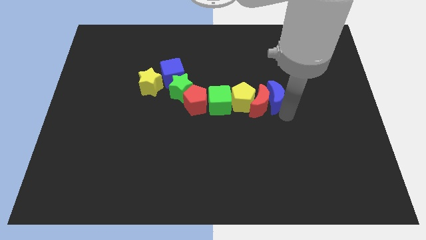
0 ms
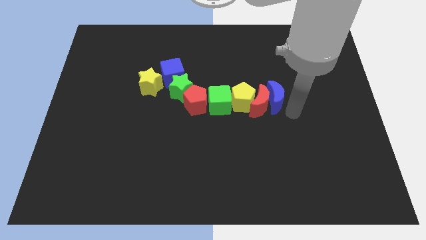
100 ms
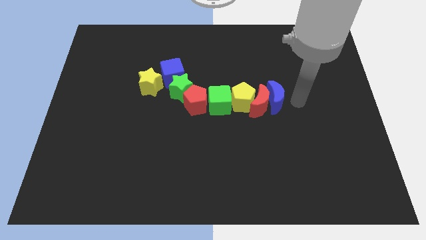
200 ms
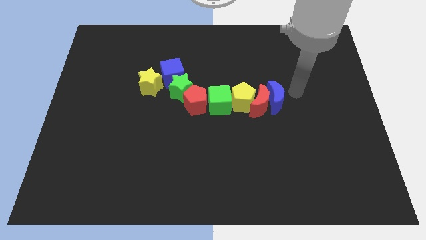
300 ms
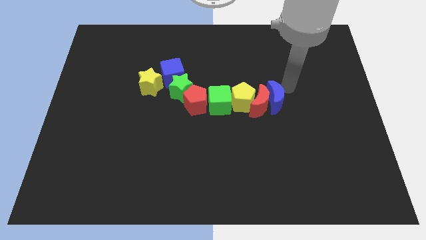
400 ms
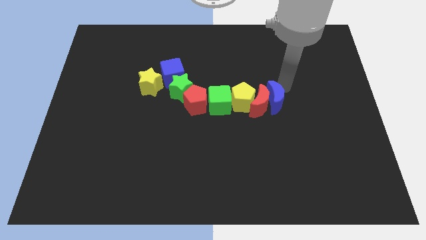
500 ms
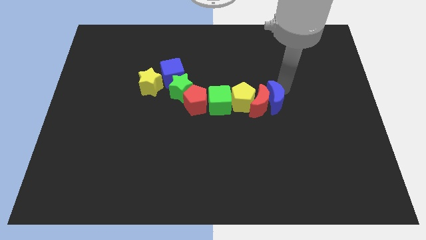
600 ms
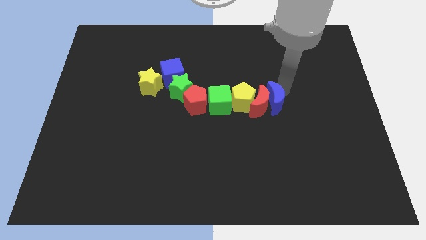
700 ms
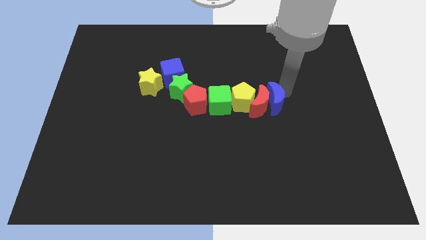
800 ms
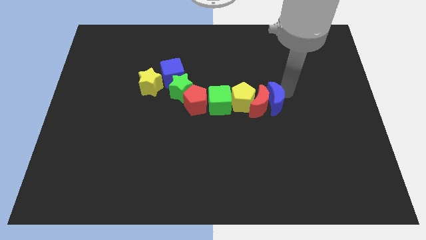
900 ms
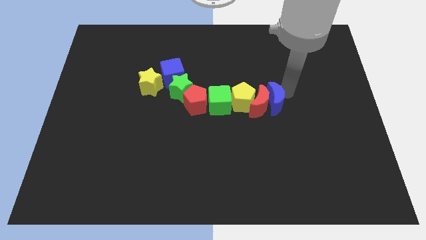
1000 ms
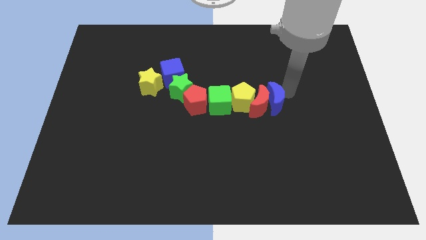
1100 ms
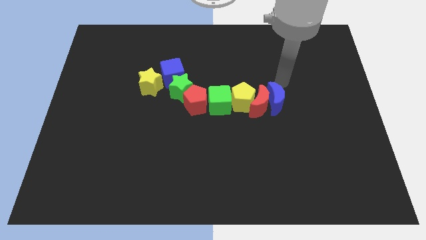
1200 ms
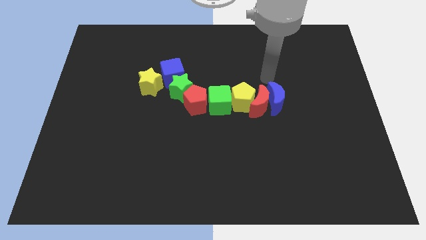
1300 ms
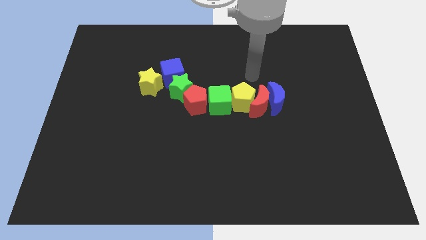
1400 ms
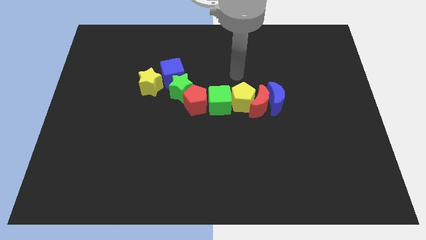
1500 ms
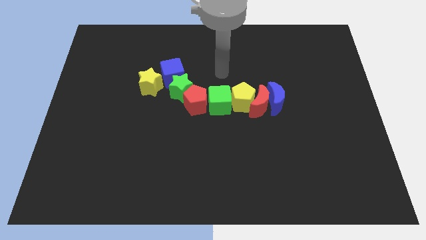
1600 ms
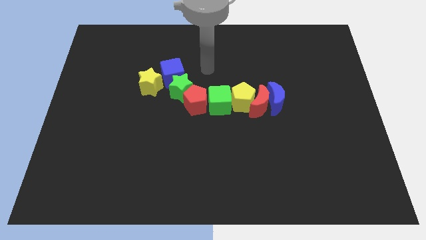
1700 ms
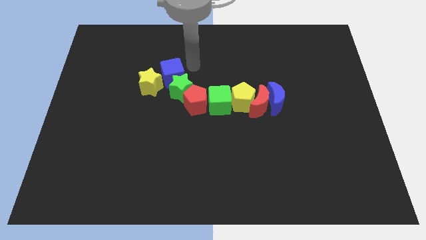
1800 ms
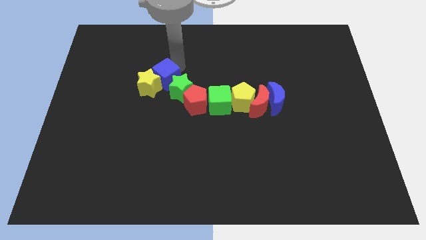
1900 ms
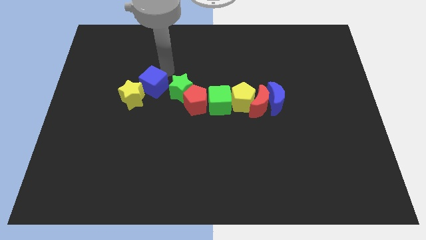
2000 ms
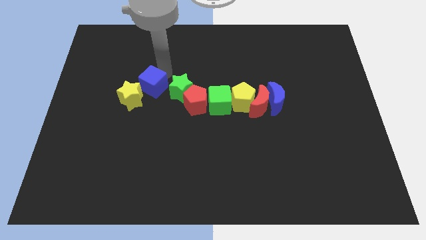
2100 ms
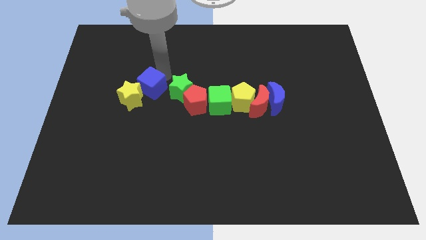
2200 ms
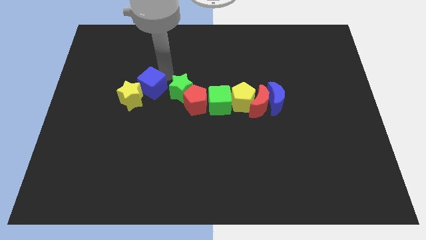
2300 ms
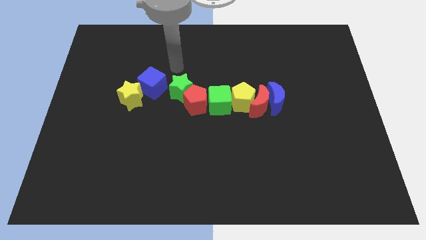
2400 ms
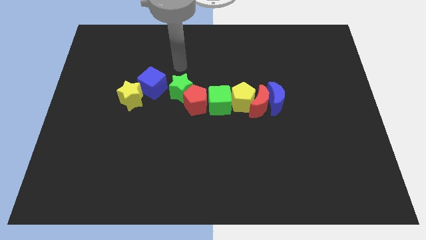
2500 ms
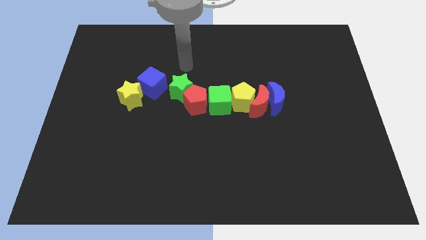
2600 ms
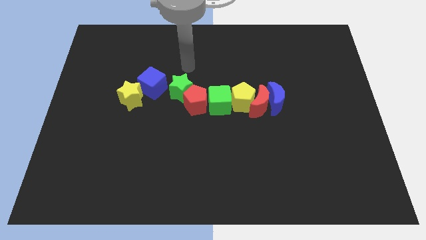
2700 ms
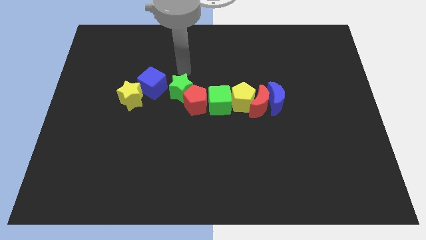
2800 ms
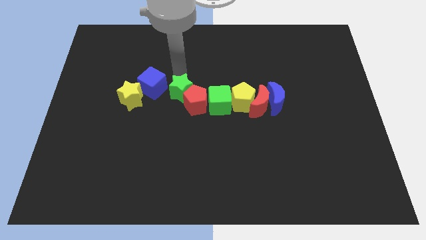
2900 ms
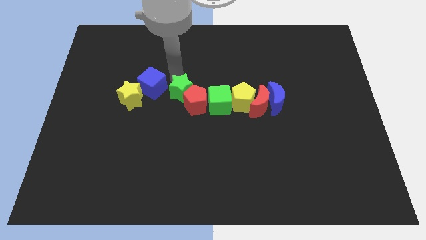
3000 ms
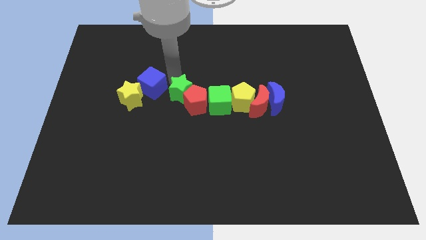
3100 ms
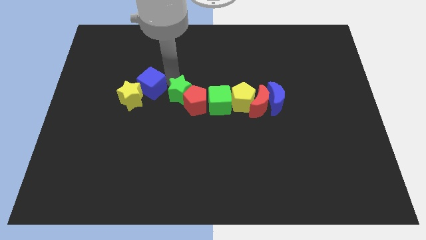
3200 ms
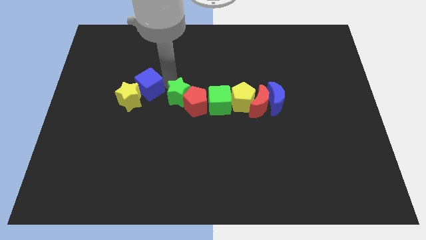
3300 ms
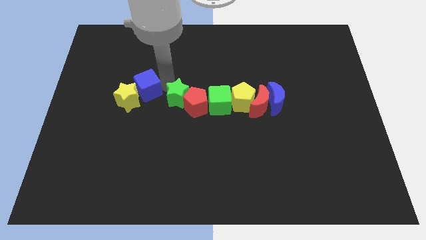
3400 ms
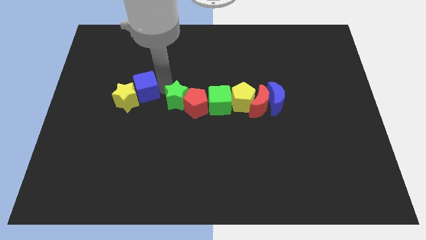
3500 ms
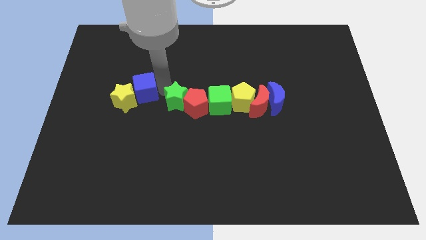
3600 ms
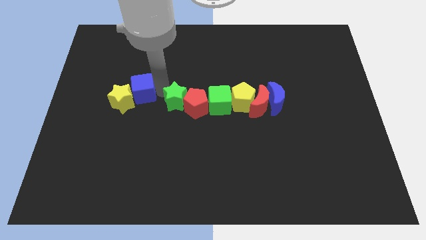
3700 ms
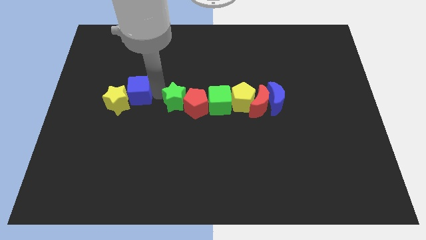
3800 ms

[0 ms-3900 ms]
separate the blue cube from green star

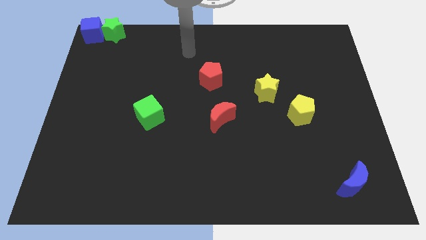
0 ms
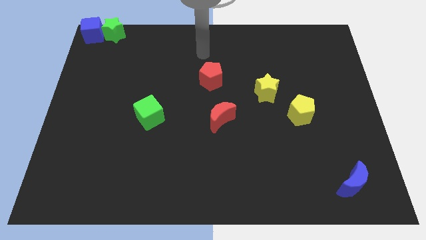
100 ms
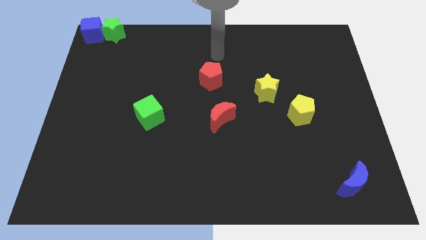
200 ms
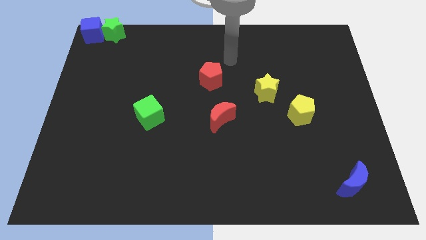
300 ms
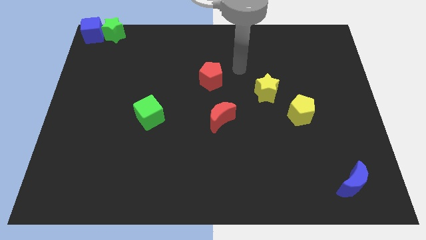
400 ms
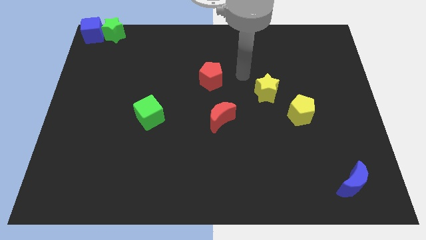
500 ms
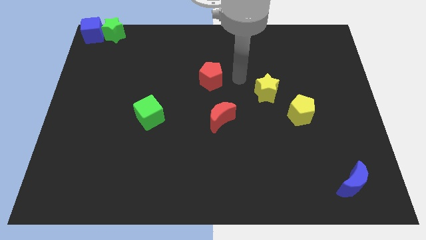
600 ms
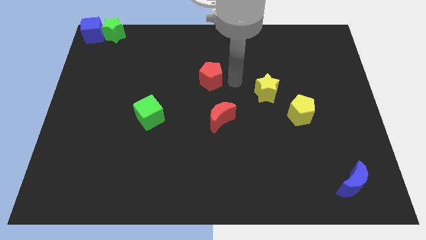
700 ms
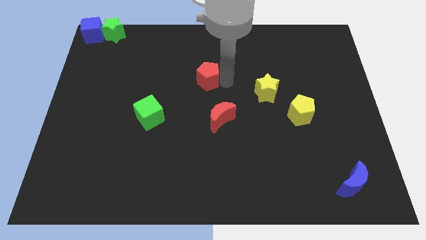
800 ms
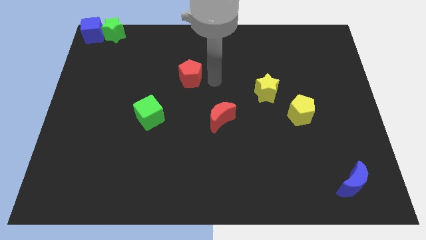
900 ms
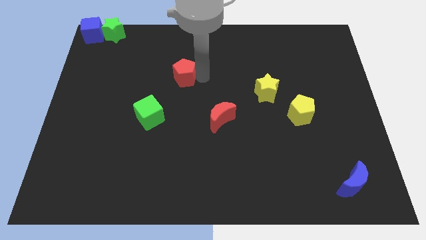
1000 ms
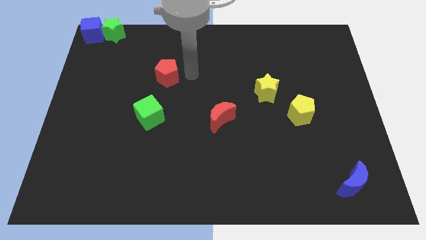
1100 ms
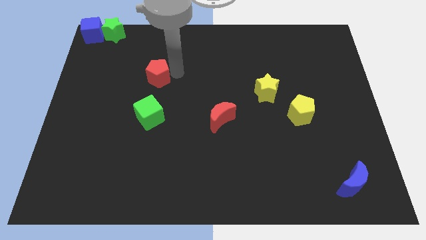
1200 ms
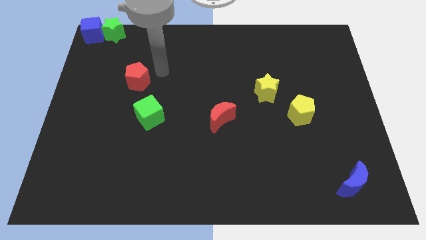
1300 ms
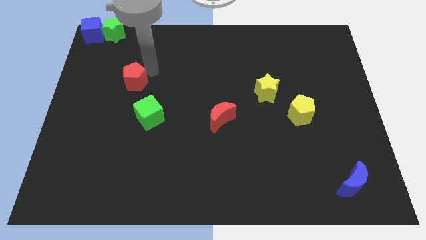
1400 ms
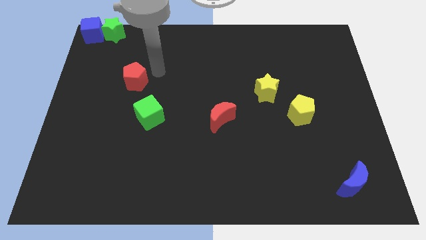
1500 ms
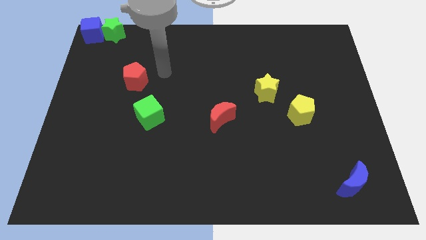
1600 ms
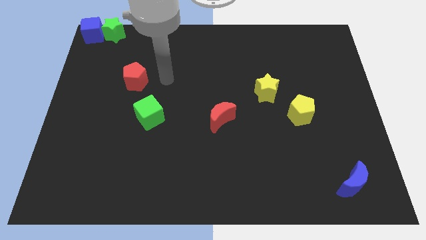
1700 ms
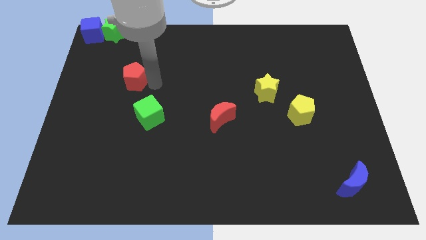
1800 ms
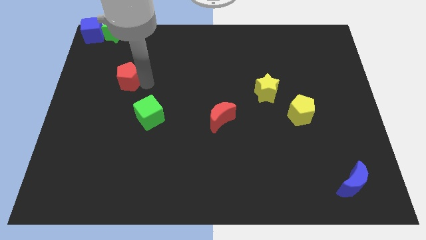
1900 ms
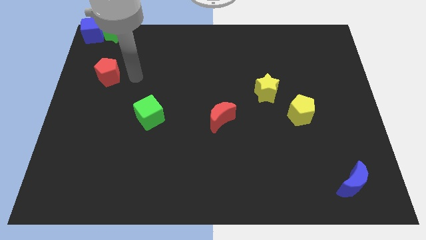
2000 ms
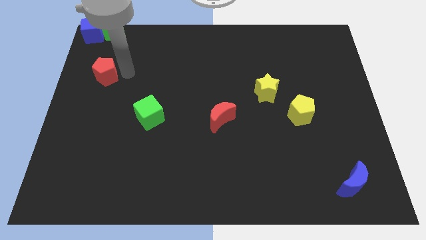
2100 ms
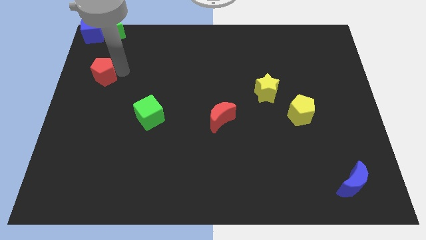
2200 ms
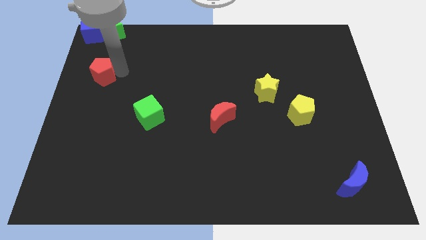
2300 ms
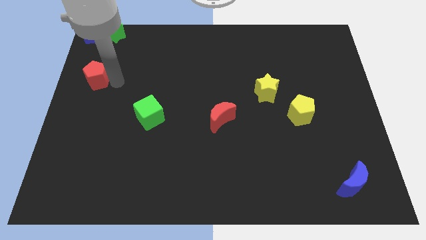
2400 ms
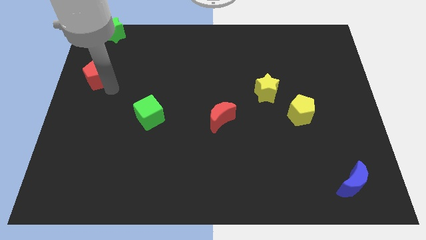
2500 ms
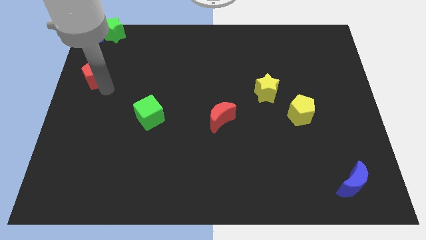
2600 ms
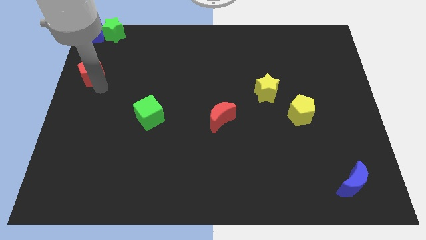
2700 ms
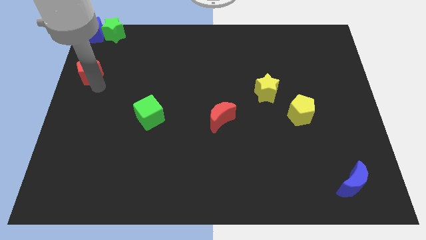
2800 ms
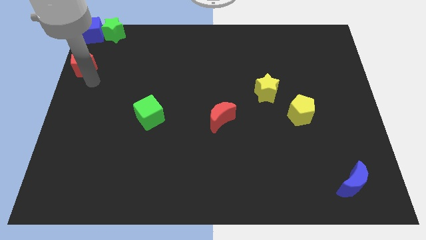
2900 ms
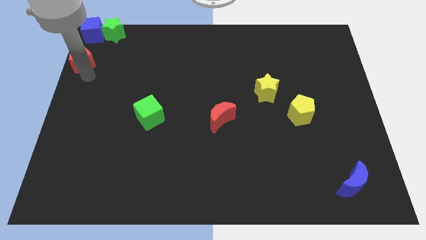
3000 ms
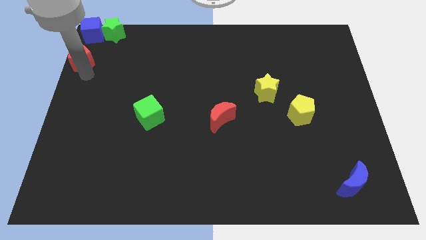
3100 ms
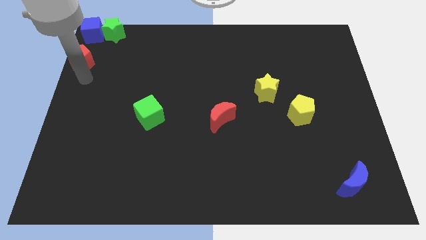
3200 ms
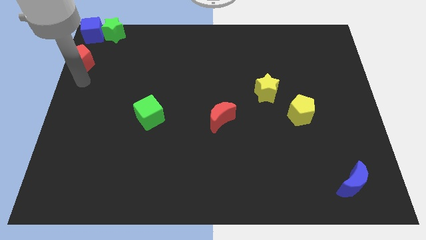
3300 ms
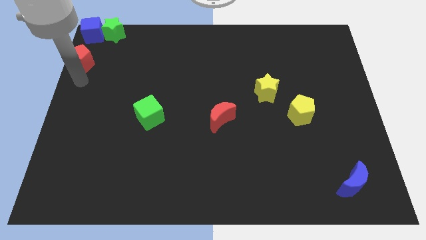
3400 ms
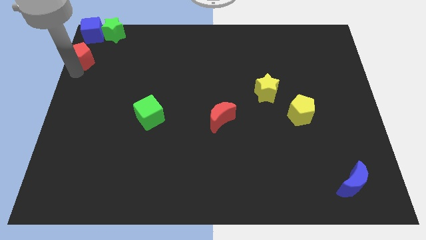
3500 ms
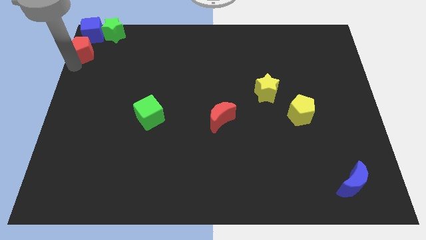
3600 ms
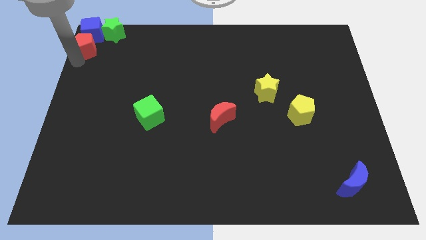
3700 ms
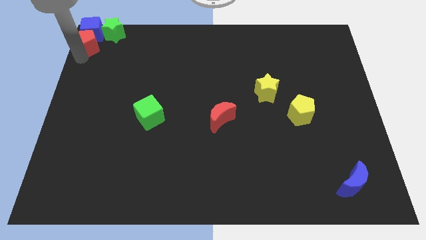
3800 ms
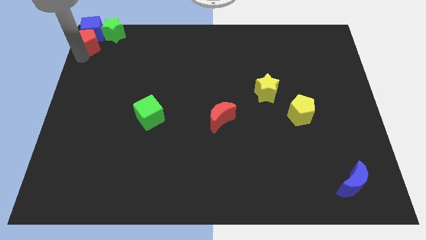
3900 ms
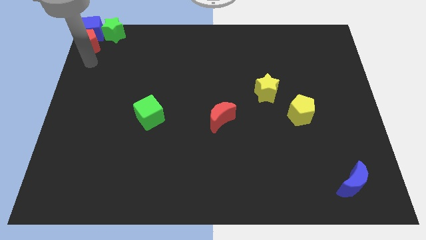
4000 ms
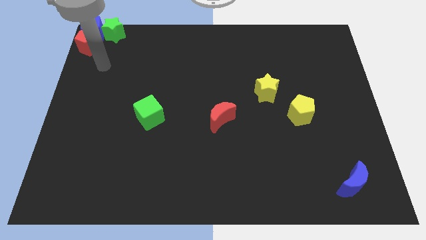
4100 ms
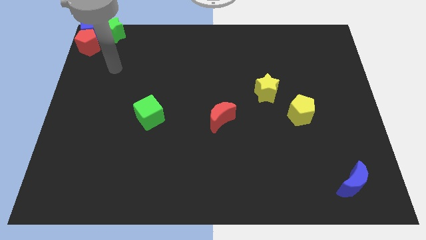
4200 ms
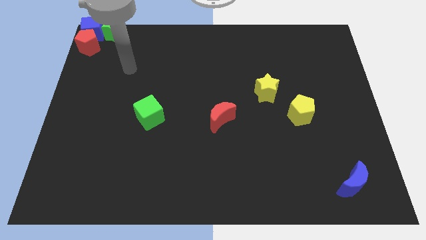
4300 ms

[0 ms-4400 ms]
push the red pentagon bottom to the blue cube in top left

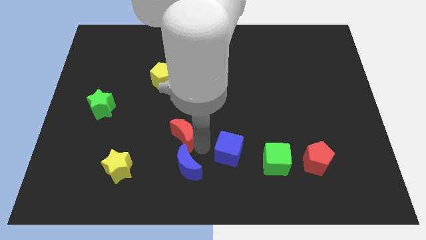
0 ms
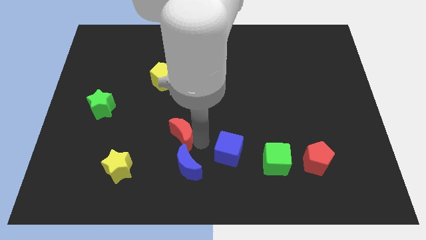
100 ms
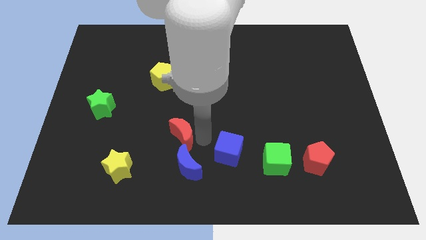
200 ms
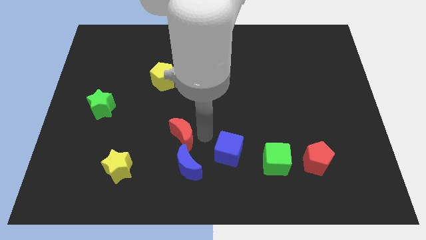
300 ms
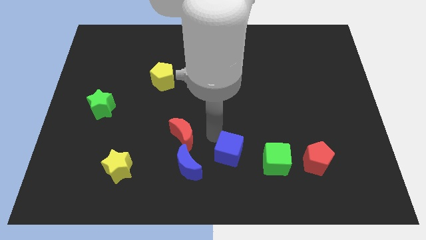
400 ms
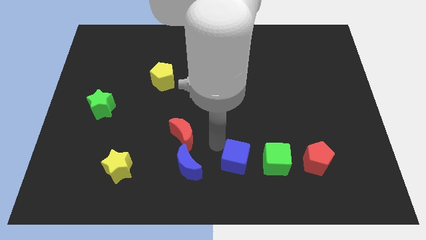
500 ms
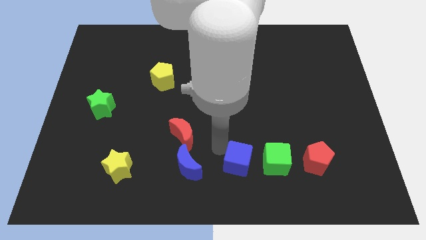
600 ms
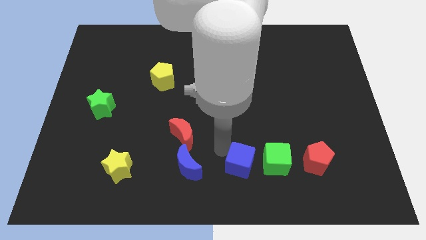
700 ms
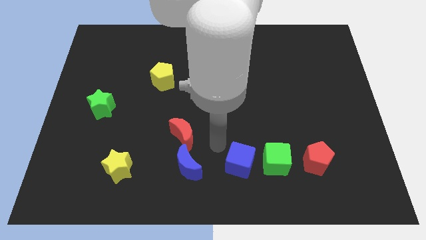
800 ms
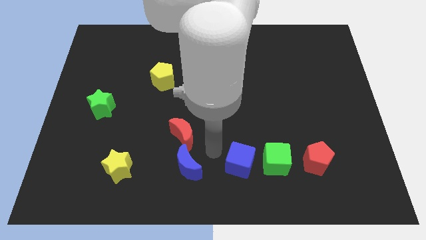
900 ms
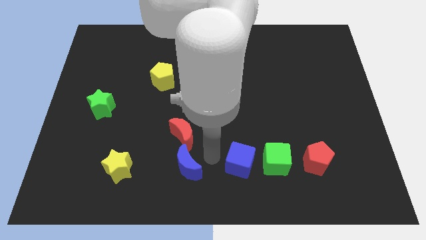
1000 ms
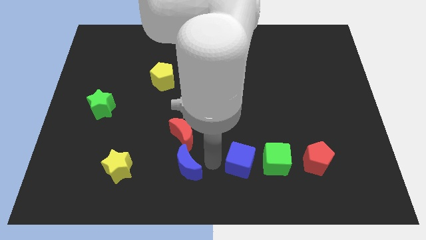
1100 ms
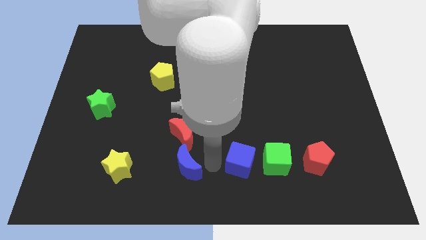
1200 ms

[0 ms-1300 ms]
adjust the blue cube to the left of the green cube
